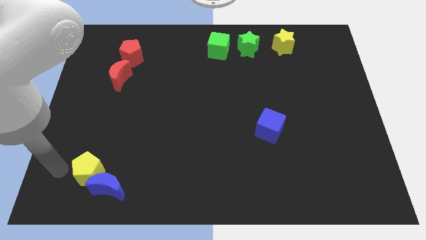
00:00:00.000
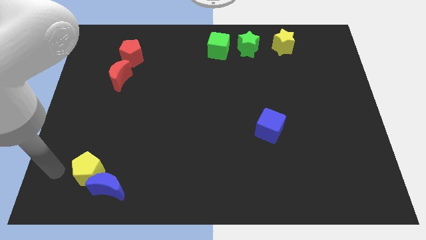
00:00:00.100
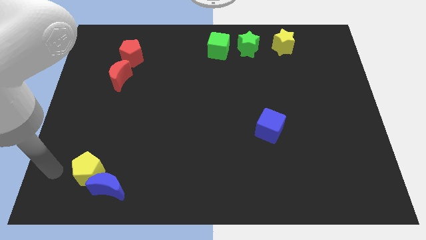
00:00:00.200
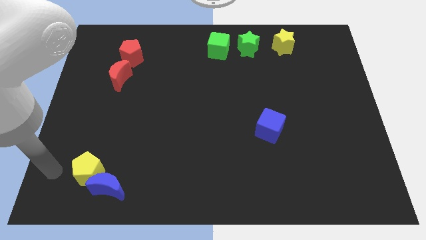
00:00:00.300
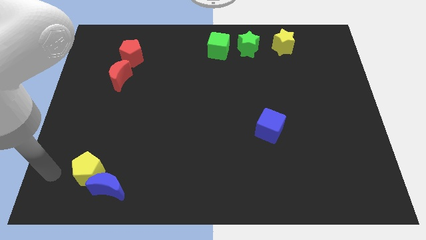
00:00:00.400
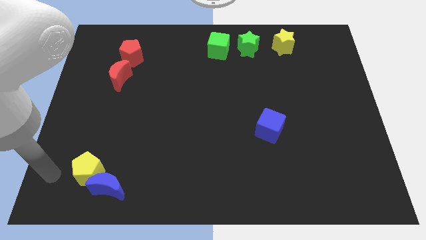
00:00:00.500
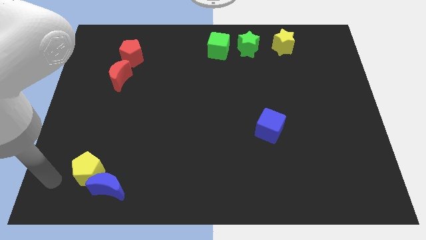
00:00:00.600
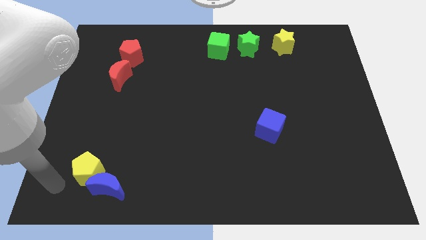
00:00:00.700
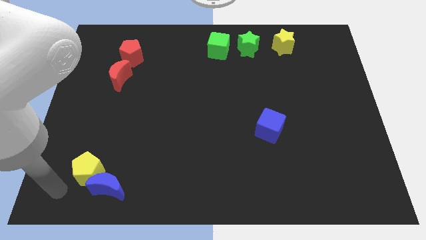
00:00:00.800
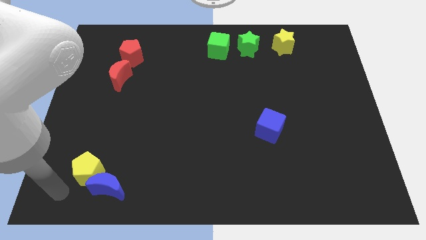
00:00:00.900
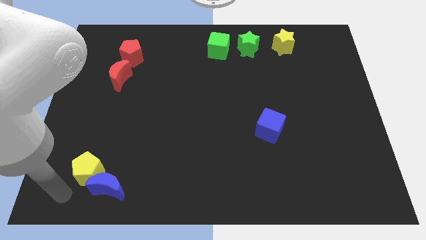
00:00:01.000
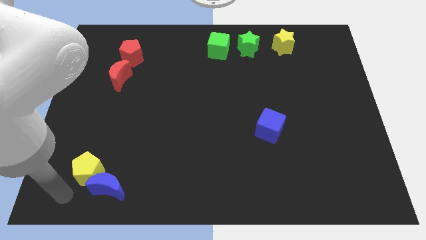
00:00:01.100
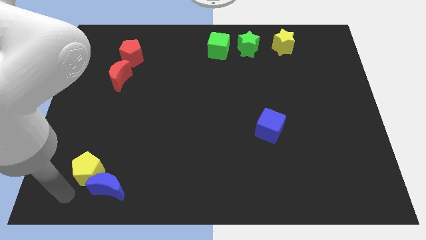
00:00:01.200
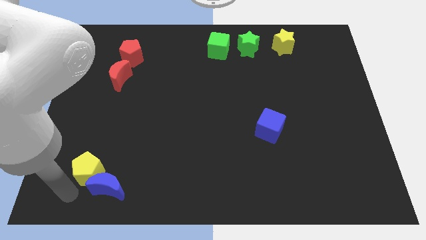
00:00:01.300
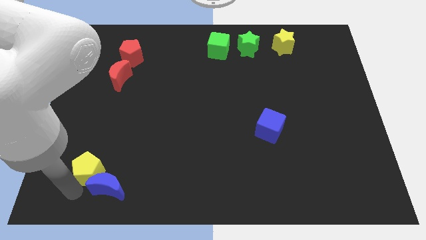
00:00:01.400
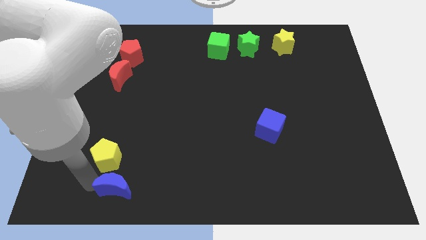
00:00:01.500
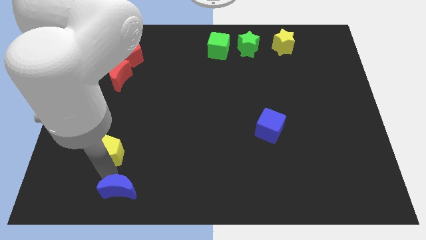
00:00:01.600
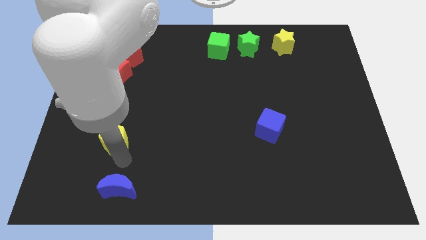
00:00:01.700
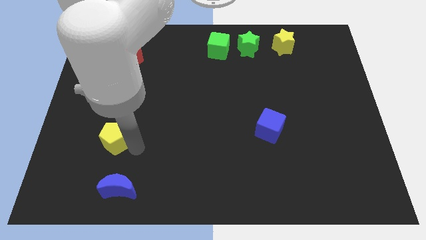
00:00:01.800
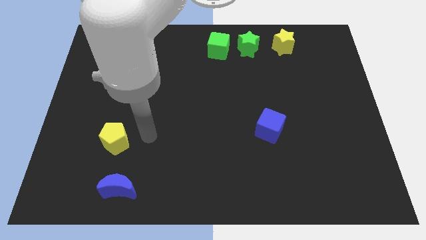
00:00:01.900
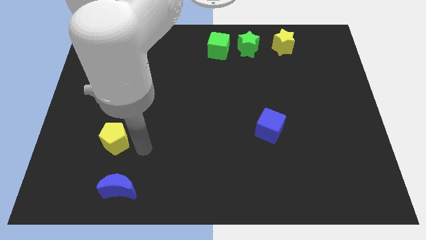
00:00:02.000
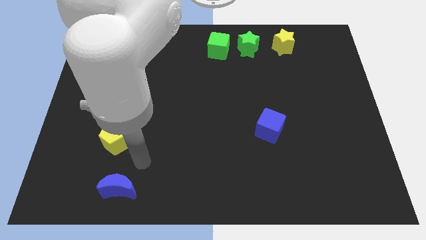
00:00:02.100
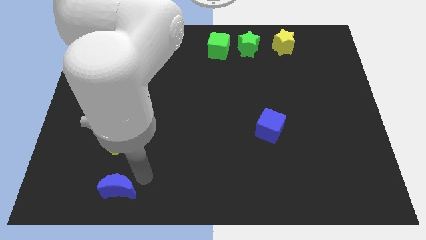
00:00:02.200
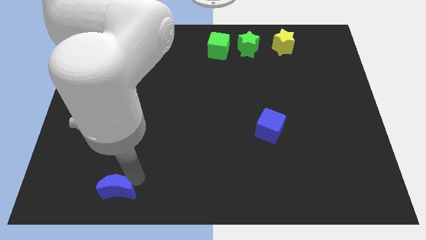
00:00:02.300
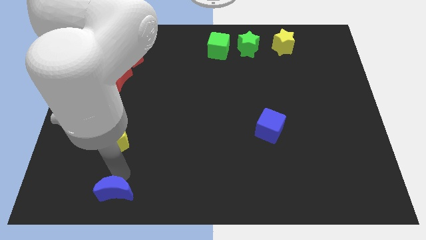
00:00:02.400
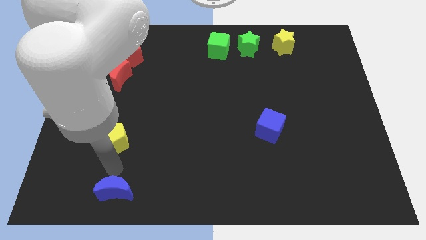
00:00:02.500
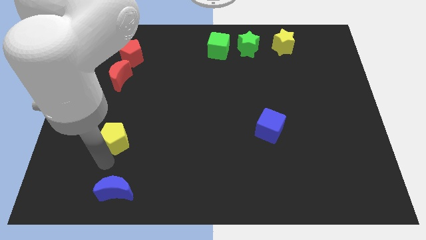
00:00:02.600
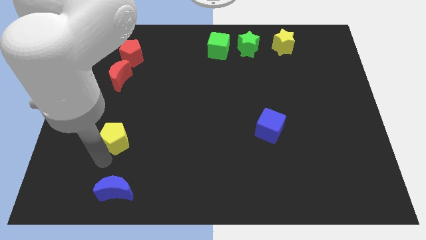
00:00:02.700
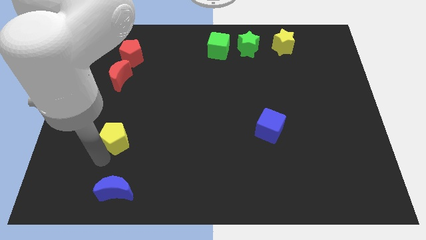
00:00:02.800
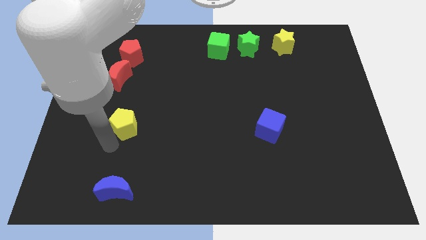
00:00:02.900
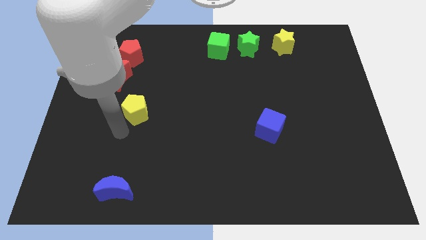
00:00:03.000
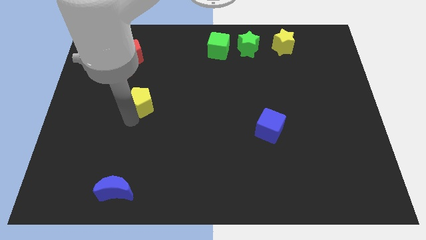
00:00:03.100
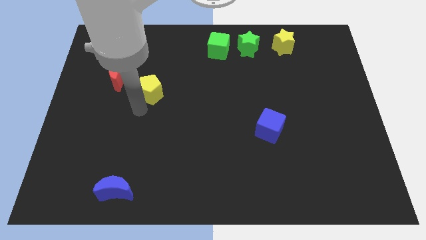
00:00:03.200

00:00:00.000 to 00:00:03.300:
separate the yellow pentagon and the blue crescent

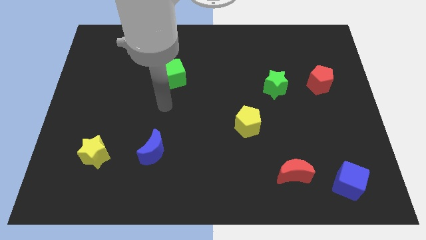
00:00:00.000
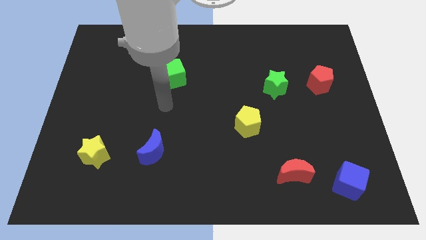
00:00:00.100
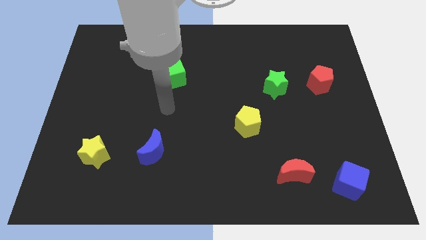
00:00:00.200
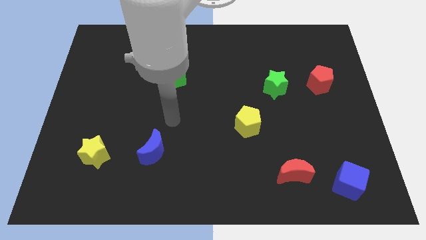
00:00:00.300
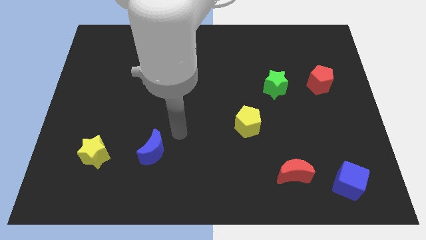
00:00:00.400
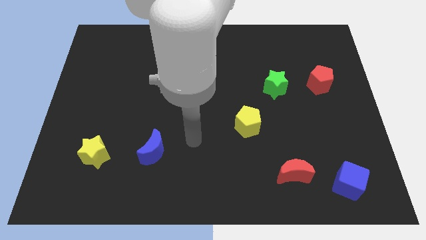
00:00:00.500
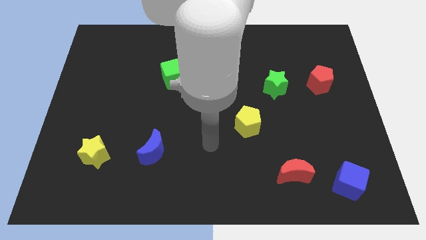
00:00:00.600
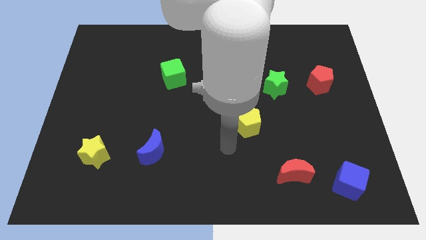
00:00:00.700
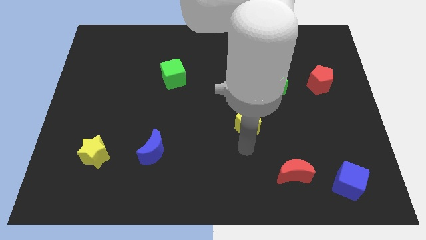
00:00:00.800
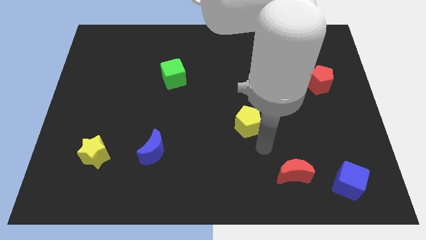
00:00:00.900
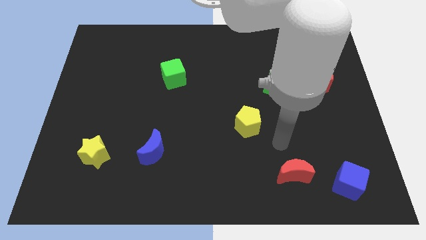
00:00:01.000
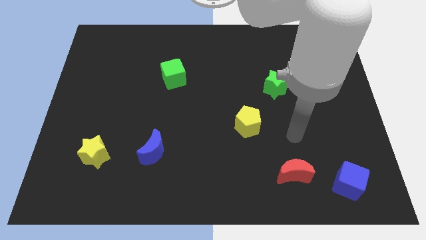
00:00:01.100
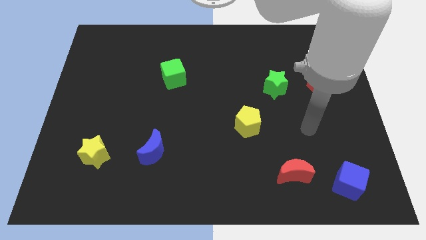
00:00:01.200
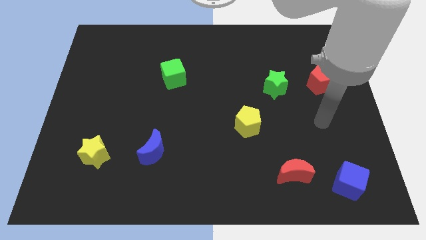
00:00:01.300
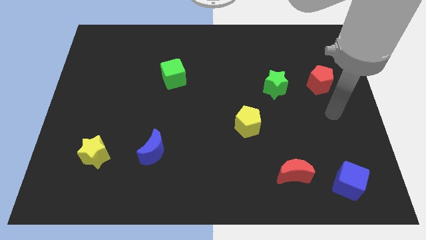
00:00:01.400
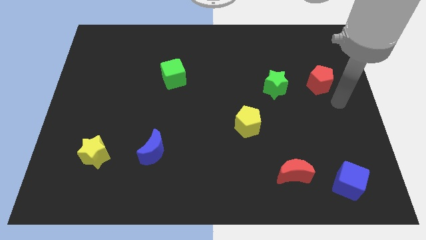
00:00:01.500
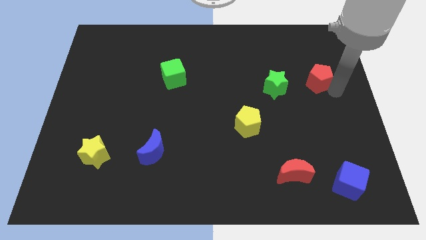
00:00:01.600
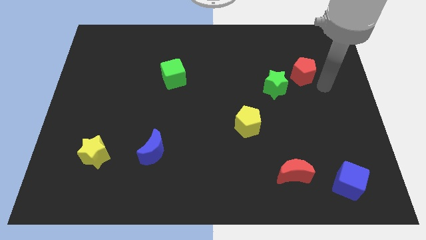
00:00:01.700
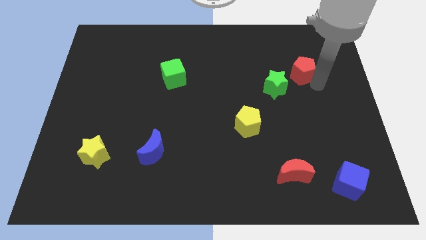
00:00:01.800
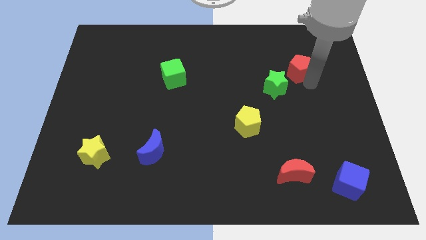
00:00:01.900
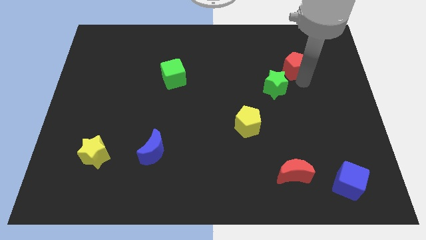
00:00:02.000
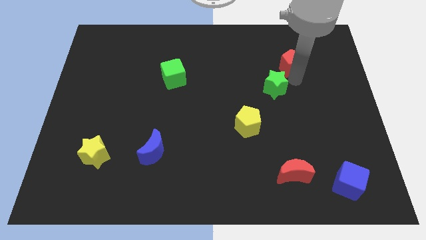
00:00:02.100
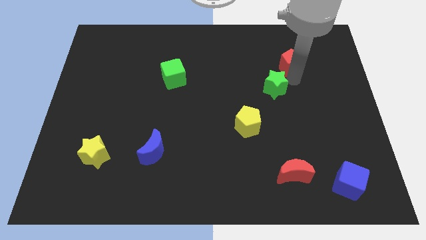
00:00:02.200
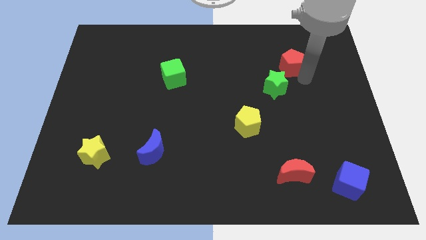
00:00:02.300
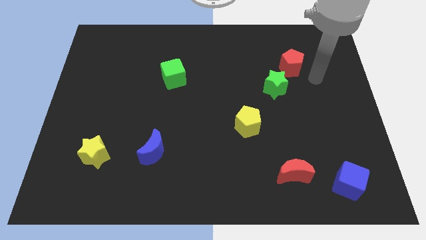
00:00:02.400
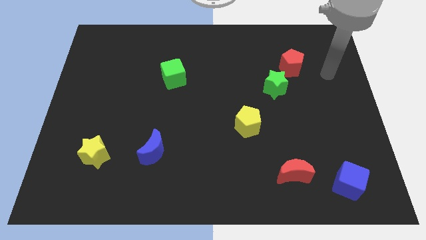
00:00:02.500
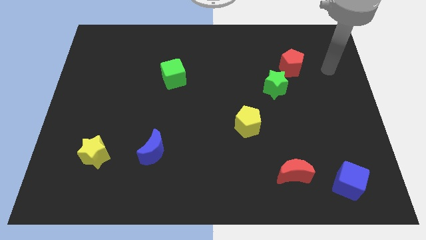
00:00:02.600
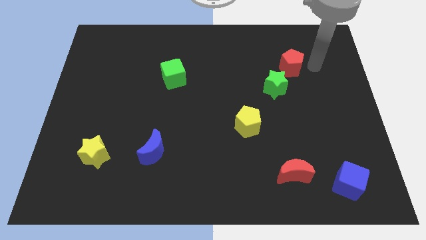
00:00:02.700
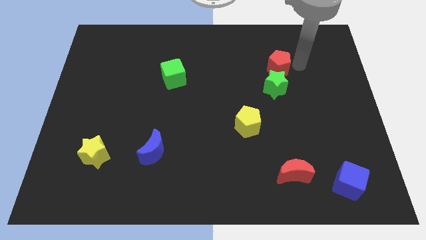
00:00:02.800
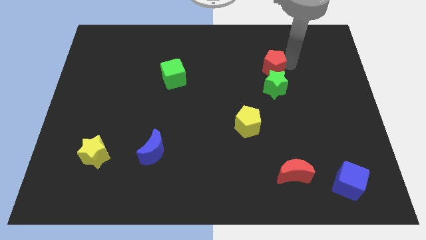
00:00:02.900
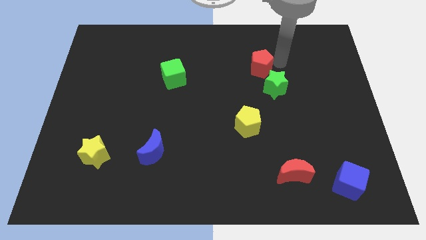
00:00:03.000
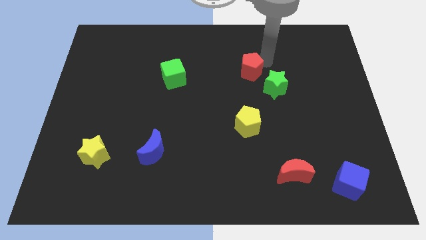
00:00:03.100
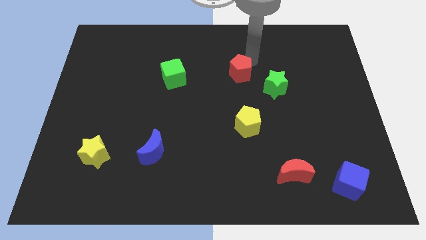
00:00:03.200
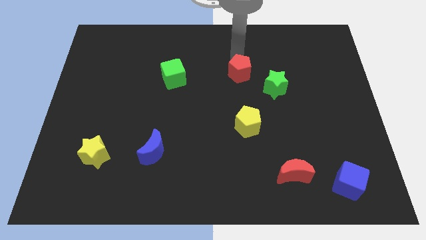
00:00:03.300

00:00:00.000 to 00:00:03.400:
push red pentagon towards left side of the board

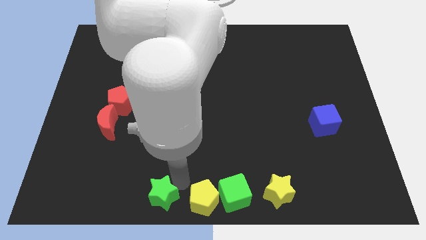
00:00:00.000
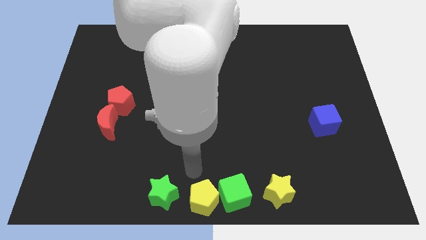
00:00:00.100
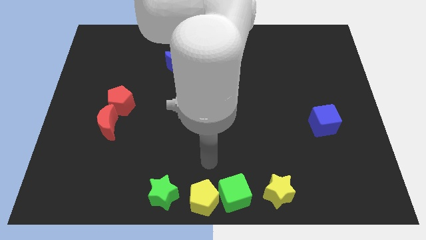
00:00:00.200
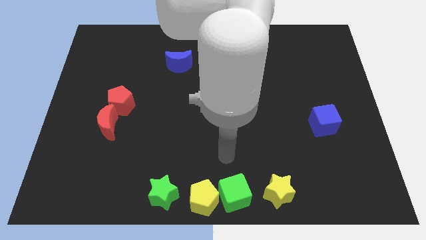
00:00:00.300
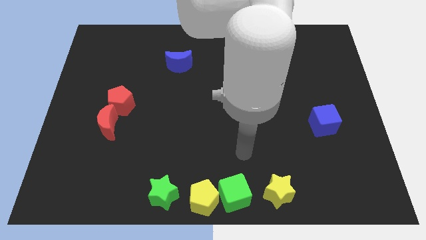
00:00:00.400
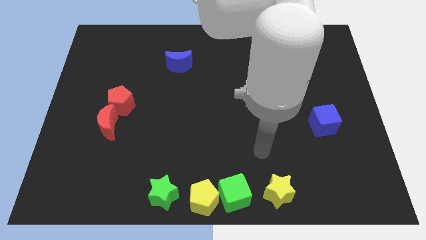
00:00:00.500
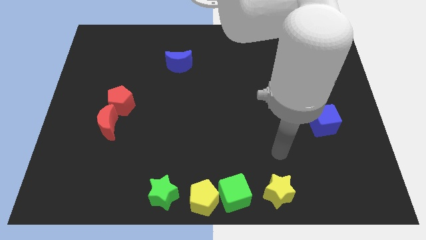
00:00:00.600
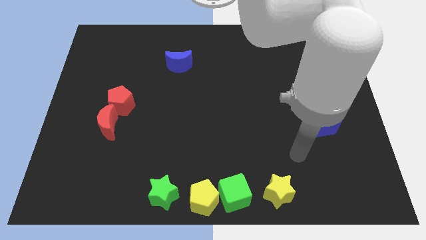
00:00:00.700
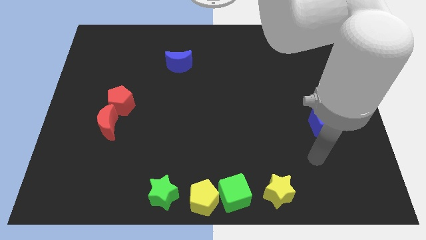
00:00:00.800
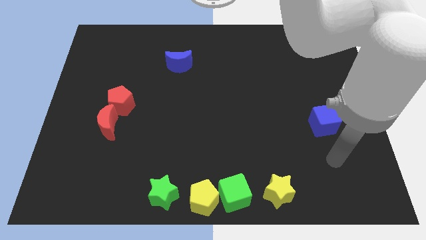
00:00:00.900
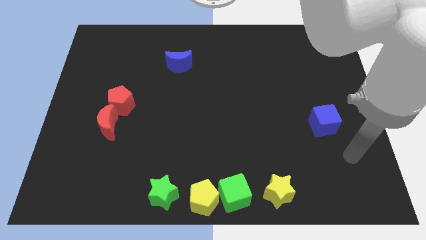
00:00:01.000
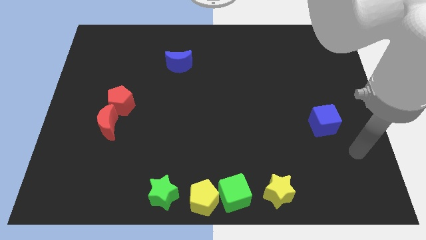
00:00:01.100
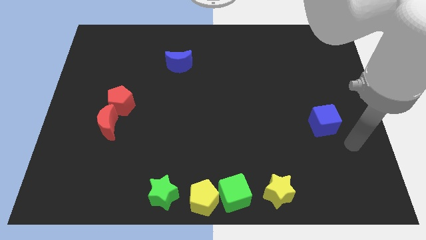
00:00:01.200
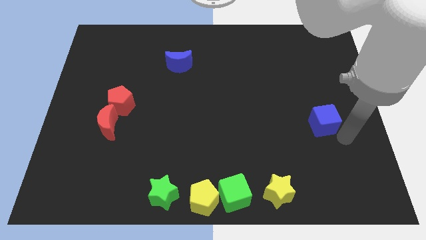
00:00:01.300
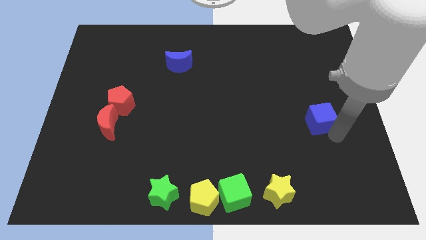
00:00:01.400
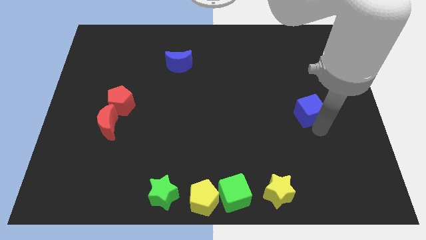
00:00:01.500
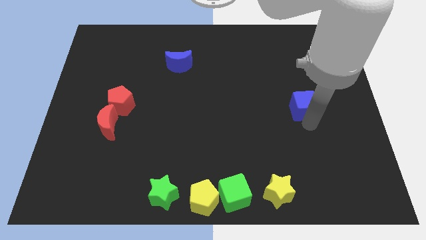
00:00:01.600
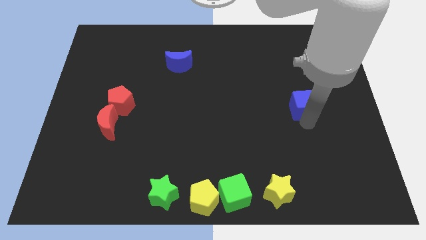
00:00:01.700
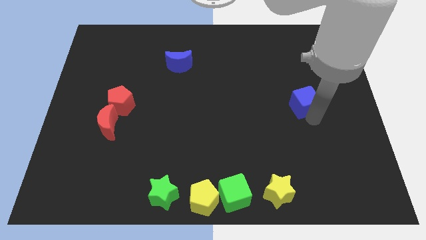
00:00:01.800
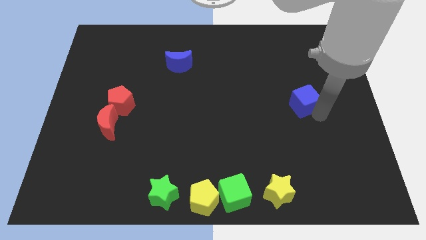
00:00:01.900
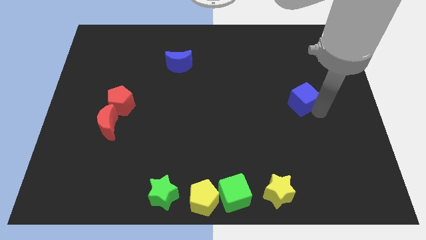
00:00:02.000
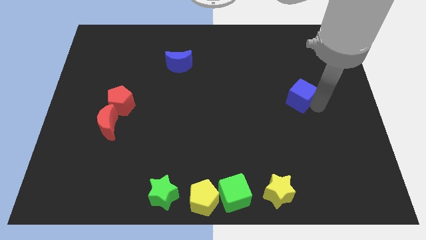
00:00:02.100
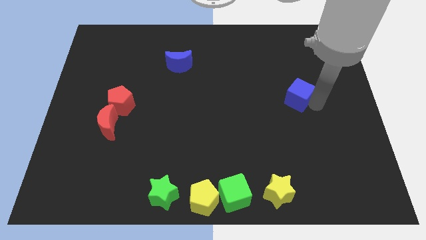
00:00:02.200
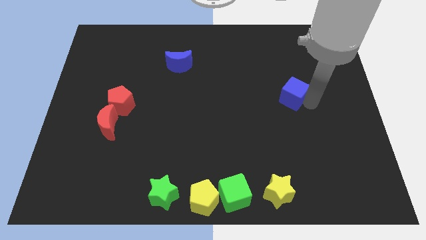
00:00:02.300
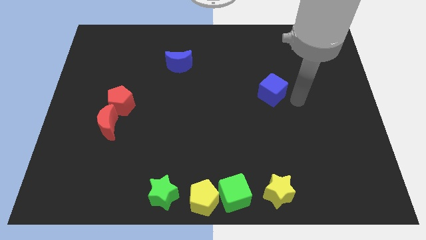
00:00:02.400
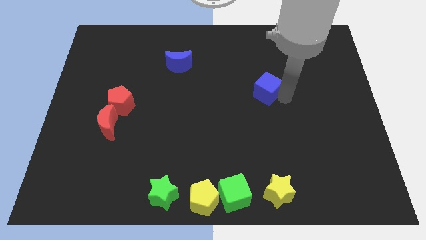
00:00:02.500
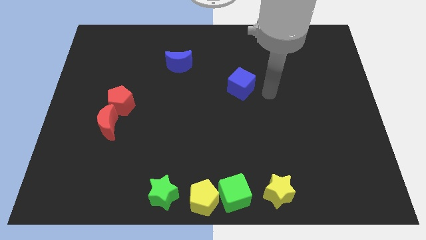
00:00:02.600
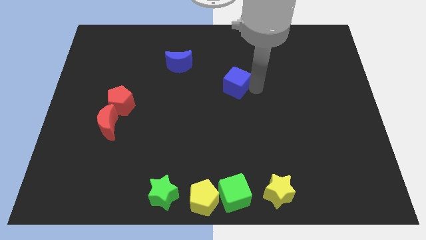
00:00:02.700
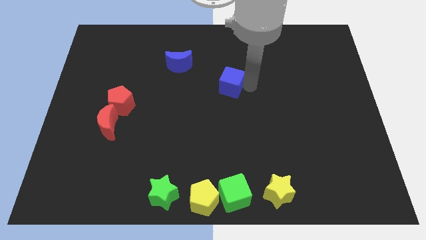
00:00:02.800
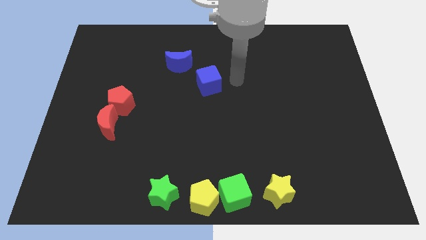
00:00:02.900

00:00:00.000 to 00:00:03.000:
move the blue cube opposite to the blue crescent
